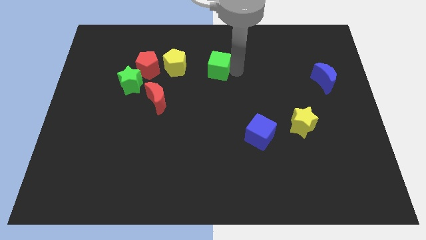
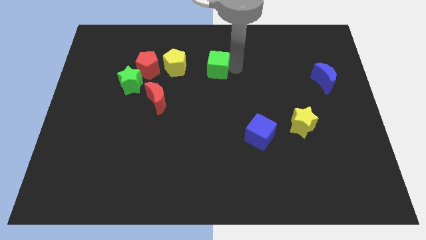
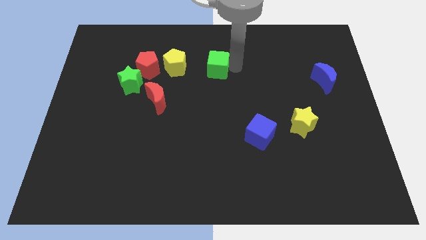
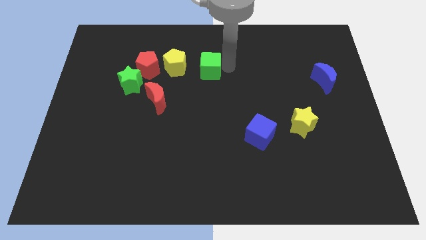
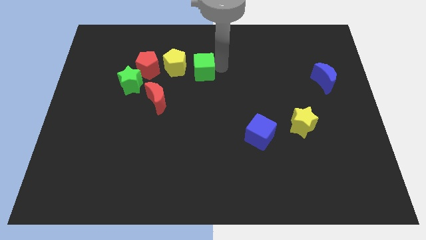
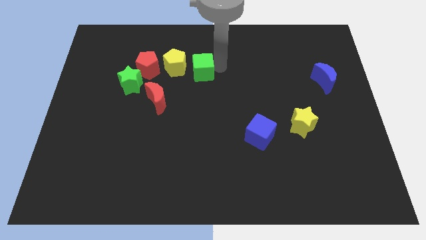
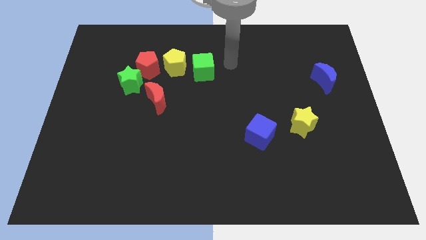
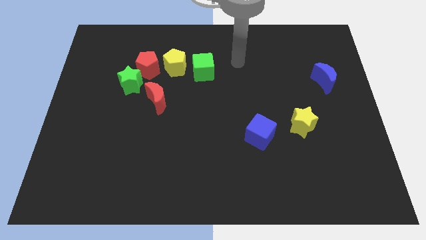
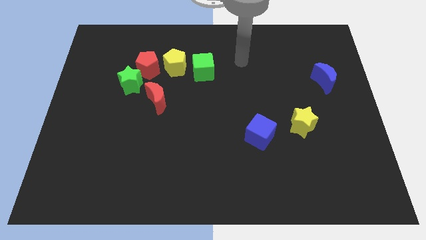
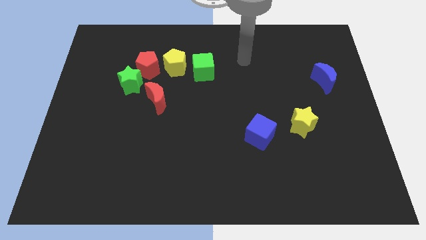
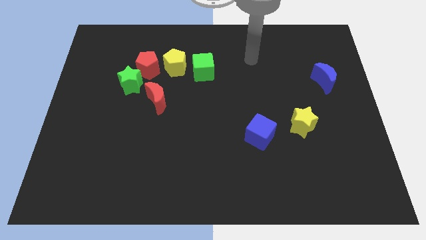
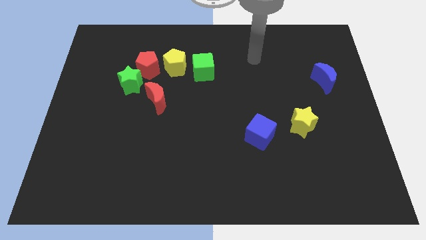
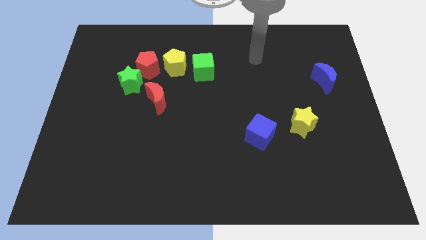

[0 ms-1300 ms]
move green cube to the right of yellow pentagon

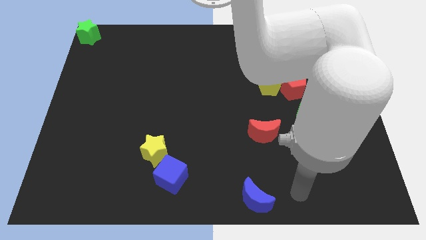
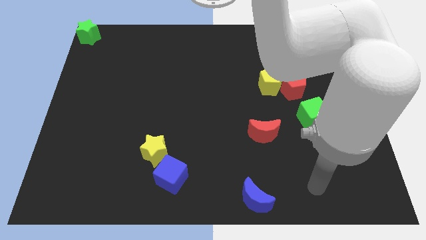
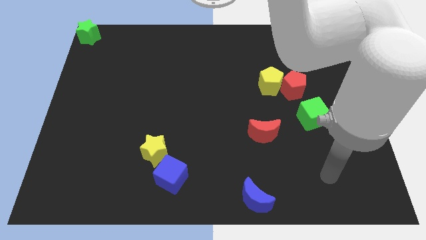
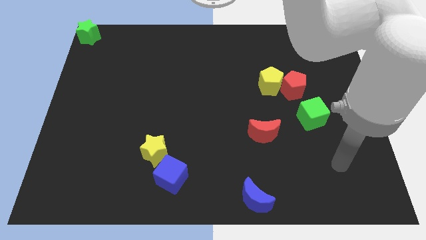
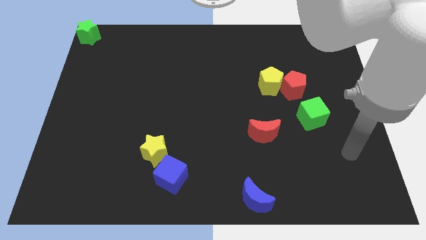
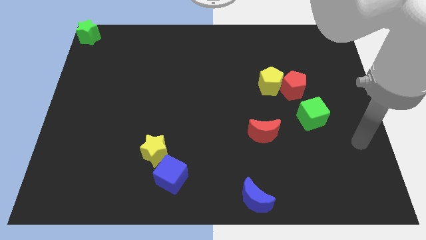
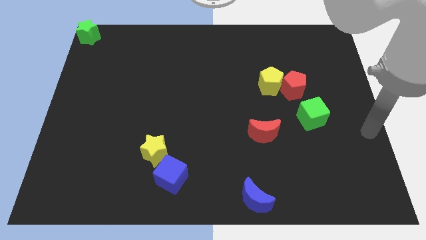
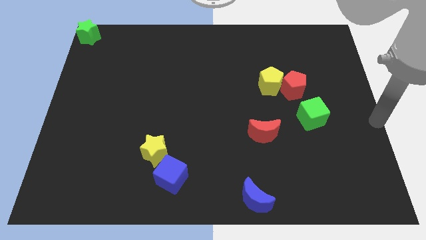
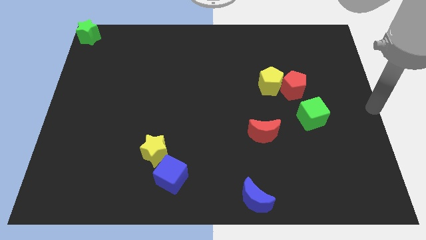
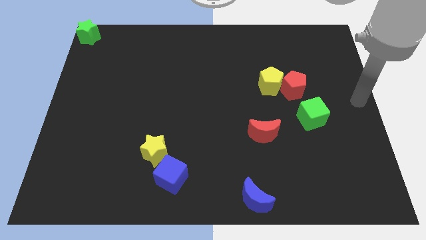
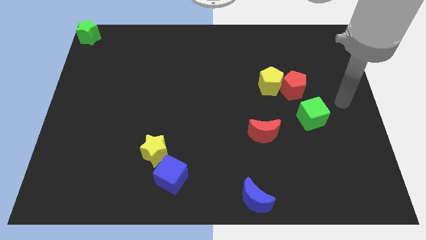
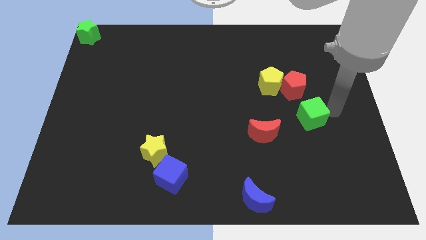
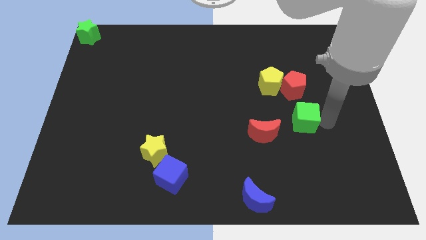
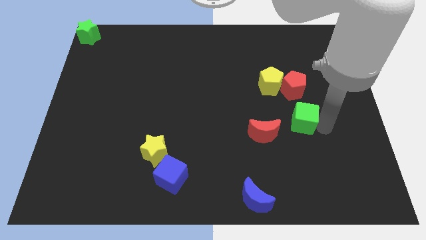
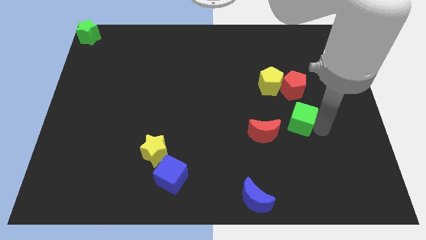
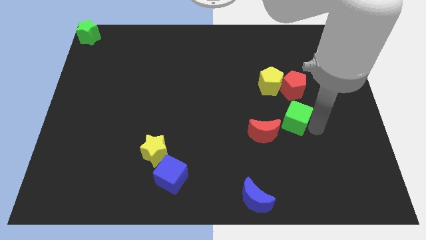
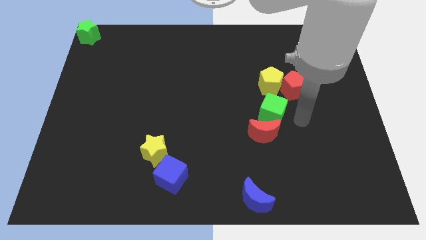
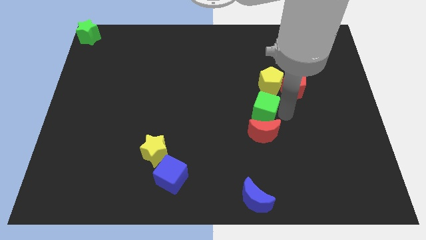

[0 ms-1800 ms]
put the green cube in between the yellow pentagon and red crescent

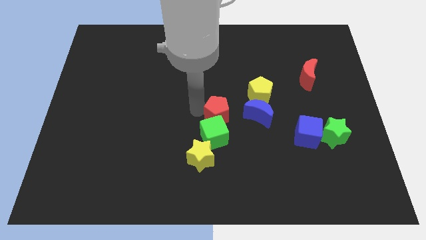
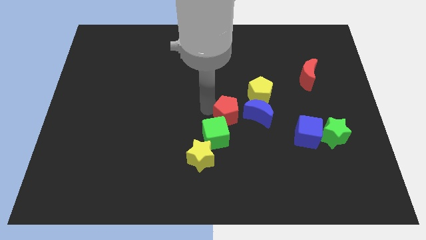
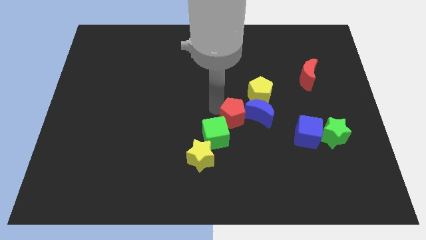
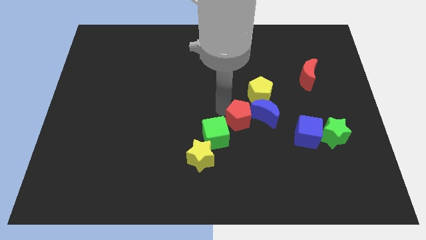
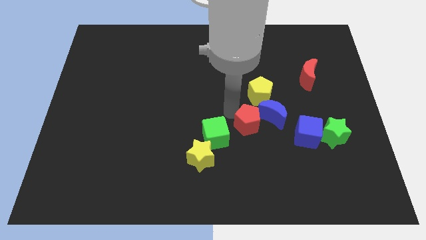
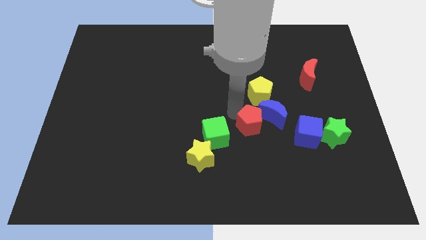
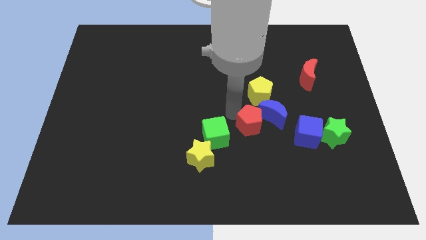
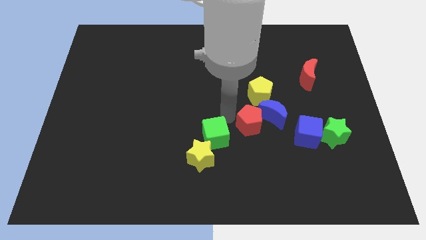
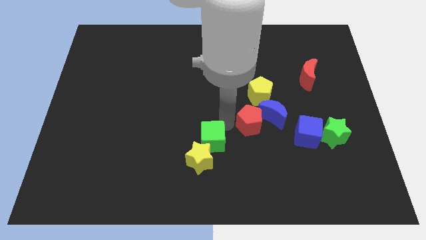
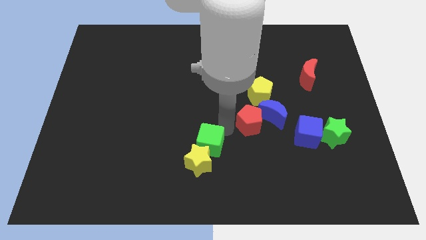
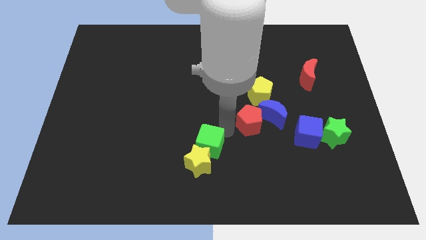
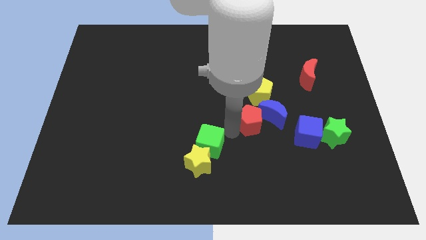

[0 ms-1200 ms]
separate red pentagon and the green cube

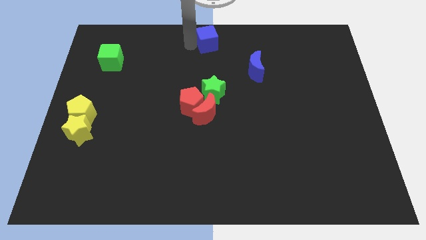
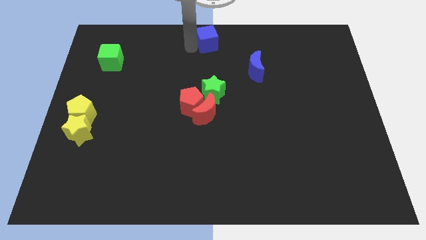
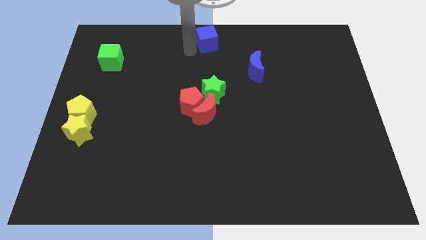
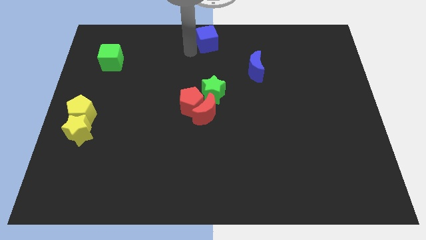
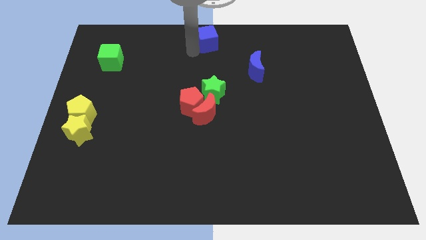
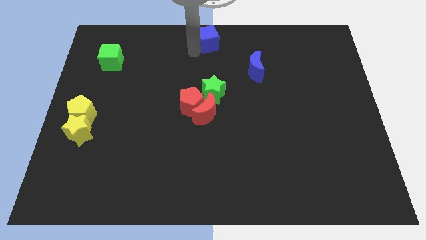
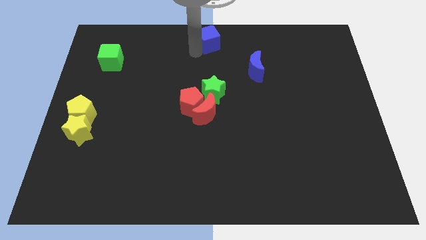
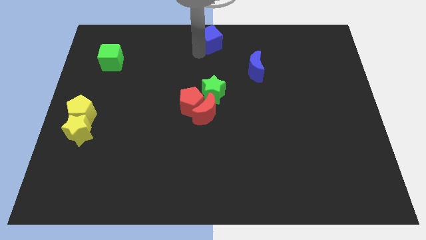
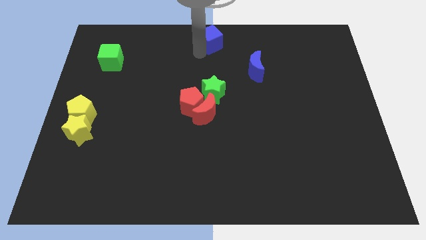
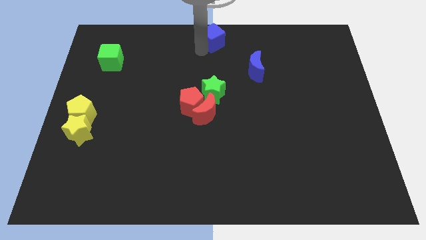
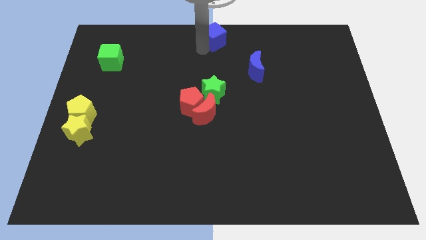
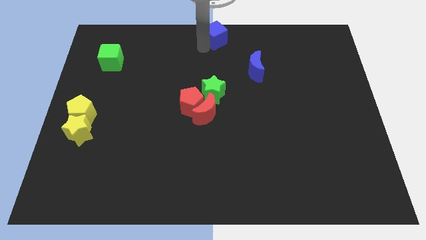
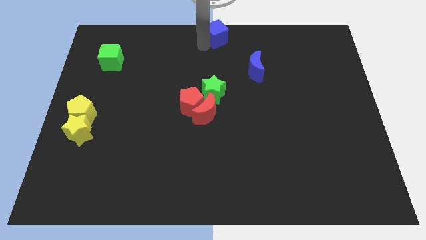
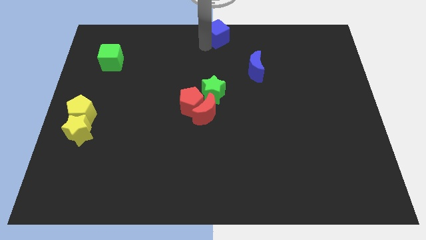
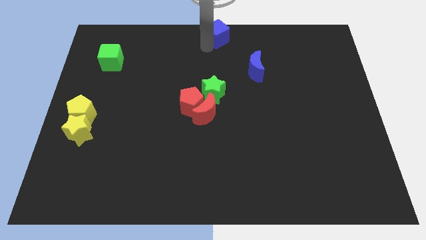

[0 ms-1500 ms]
push the blue cube towards the top center of the board

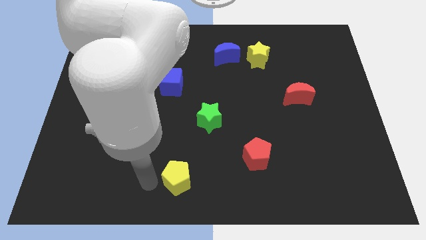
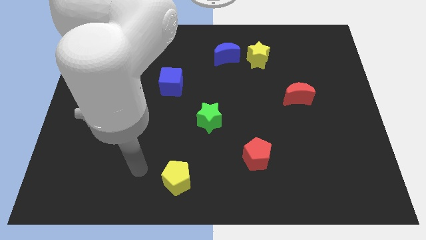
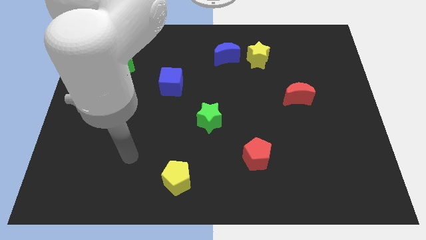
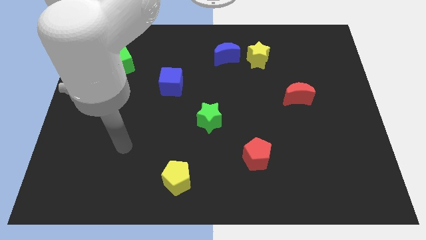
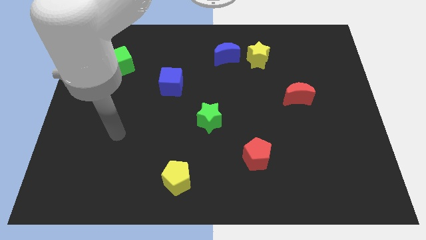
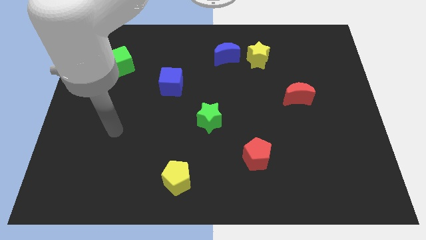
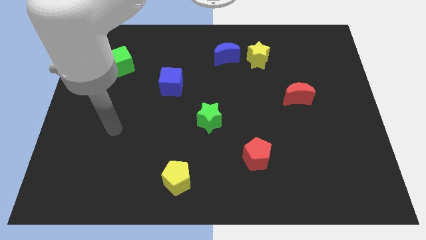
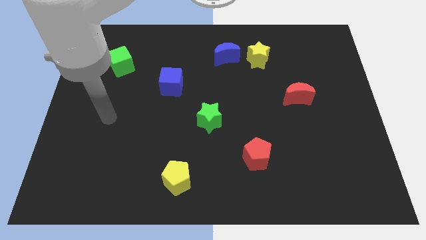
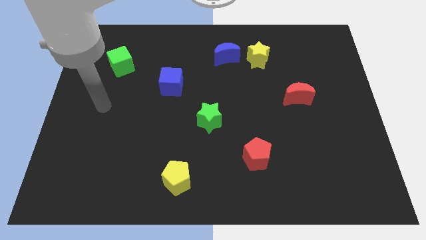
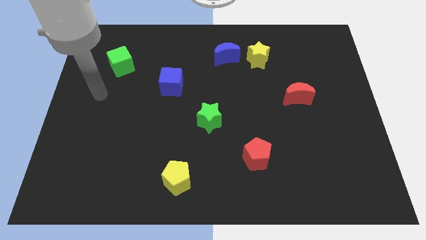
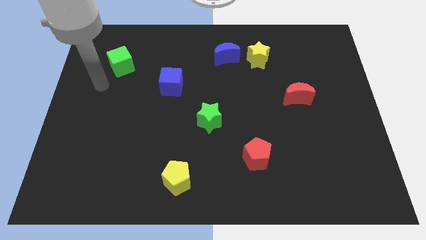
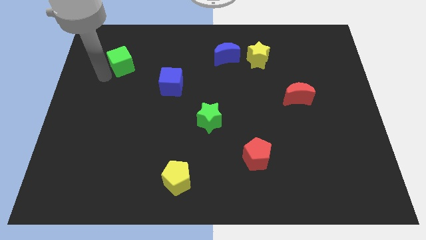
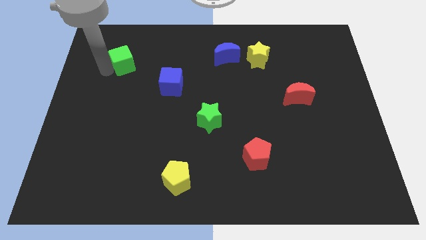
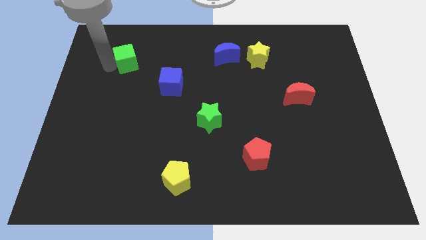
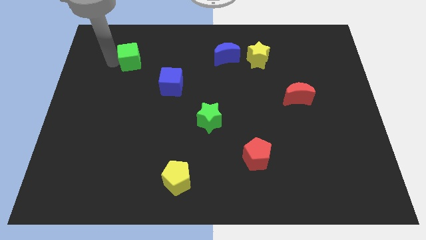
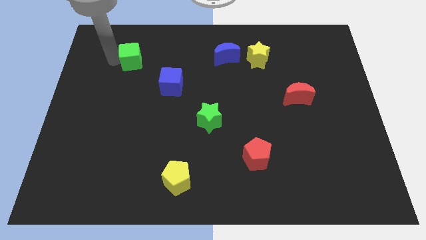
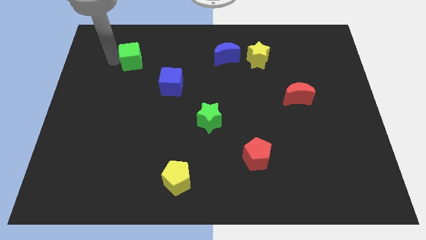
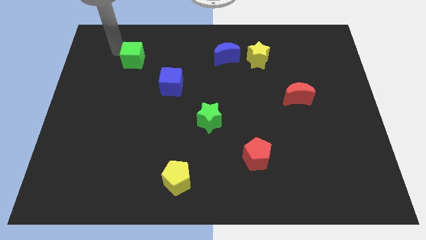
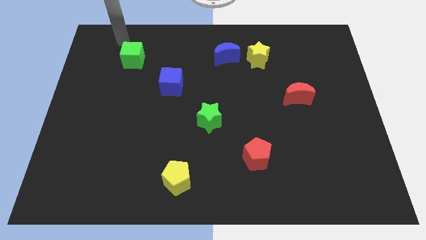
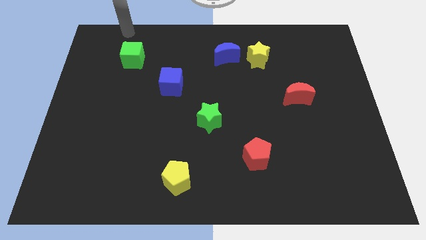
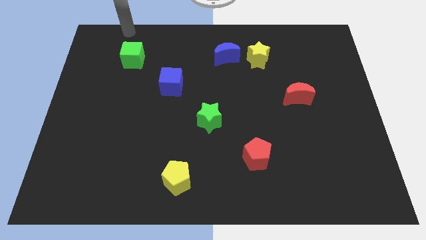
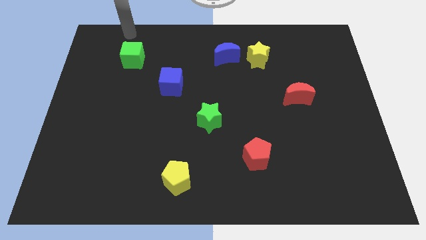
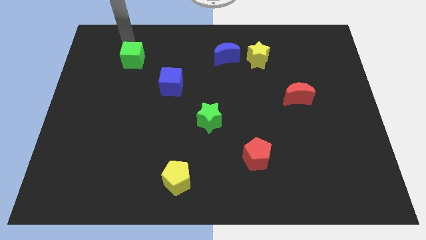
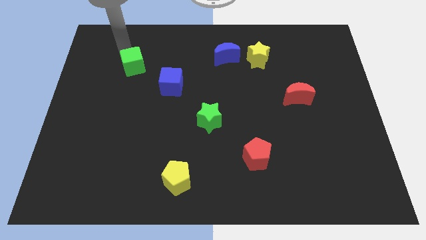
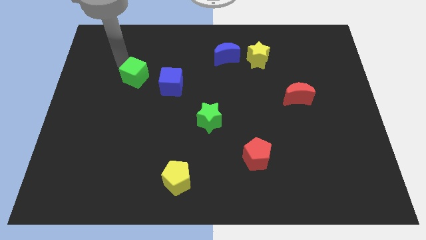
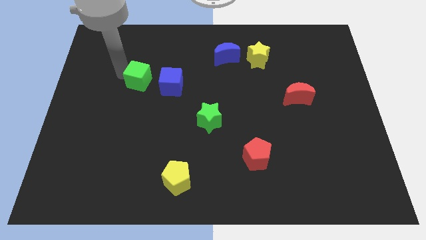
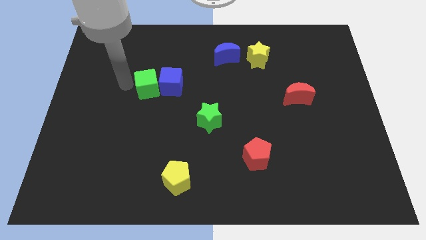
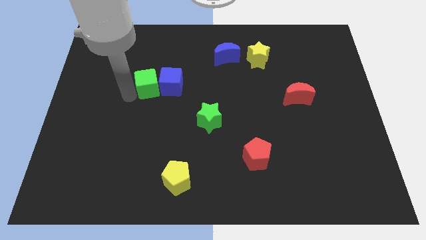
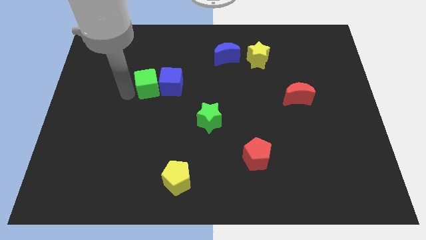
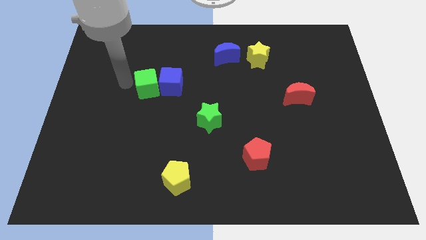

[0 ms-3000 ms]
place the green cube left to the blue cube
